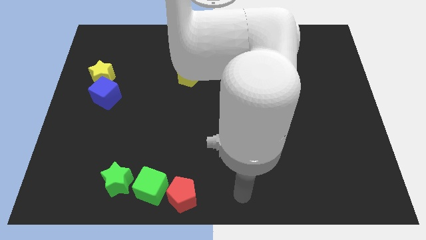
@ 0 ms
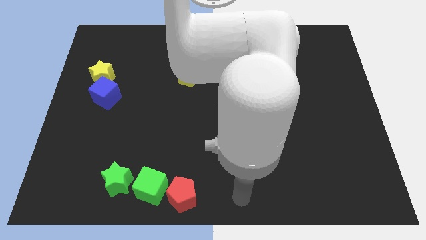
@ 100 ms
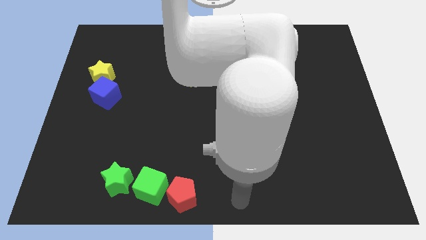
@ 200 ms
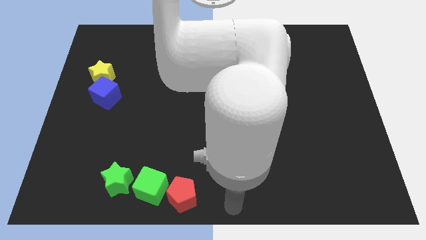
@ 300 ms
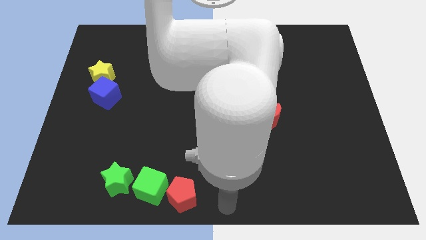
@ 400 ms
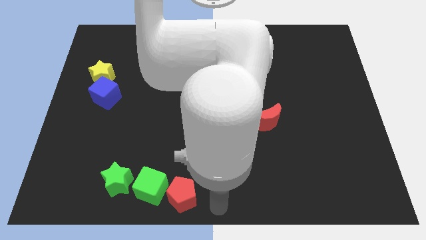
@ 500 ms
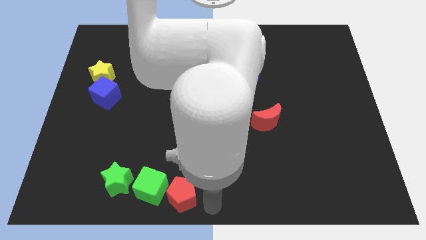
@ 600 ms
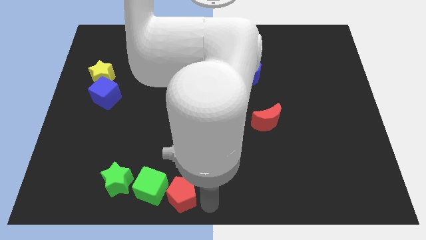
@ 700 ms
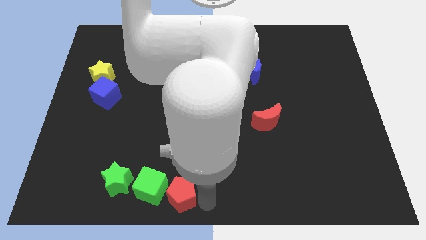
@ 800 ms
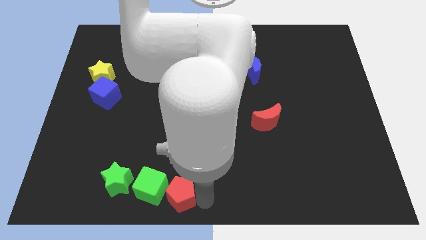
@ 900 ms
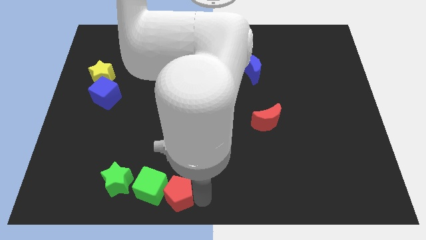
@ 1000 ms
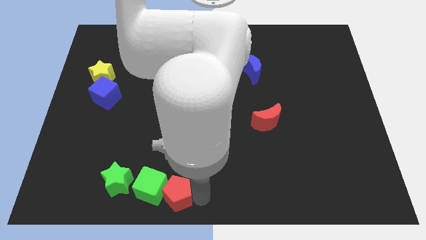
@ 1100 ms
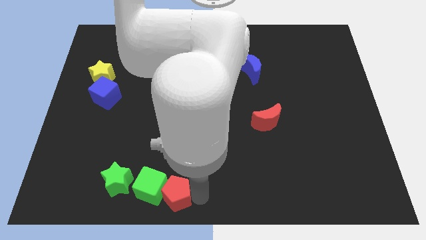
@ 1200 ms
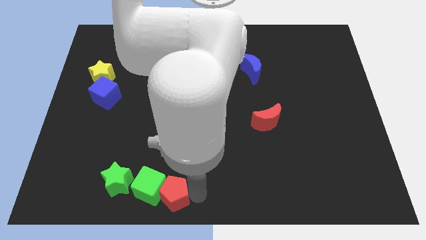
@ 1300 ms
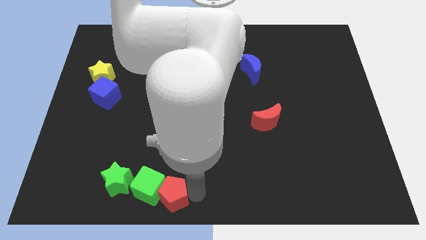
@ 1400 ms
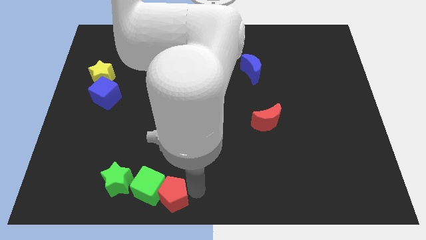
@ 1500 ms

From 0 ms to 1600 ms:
place the red pentagon next to the green cube

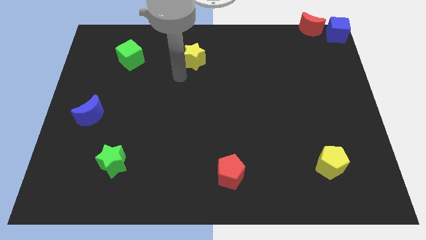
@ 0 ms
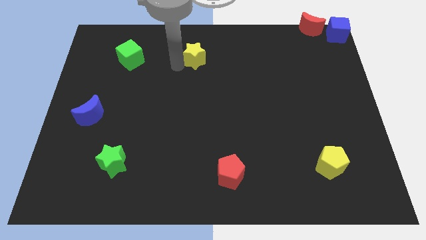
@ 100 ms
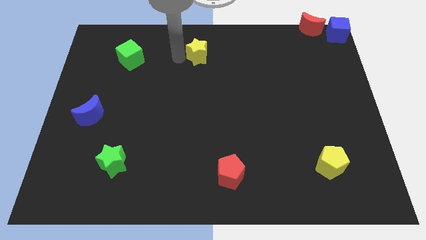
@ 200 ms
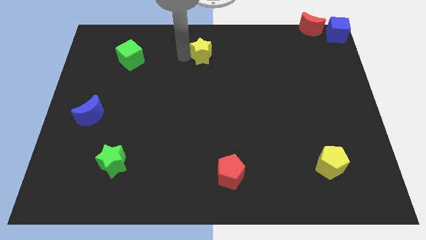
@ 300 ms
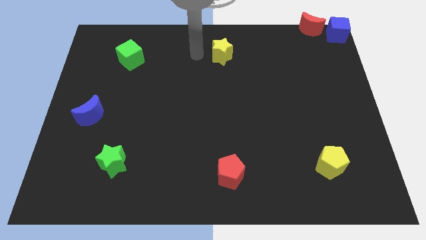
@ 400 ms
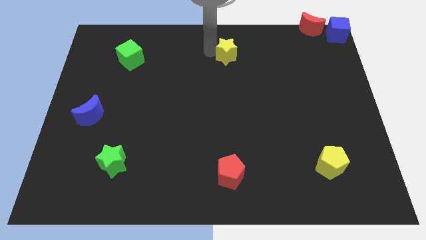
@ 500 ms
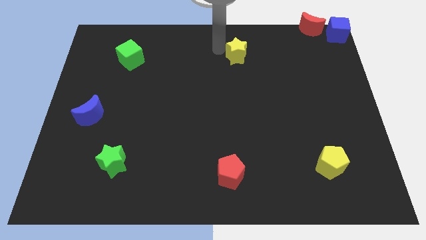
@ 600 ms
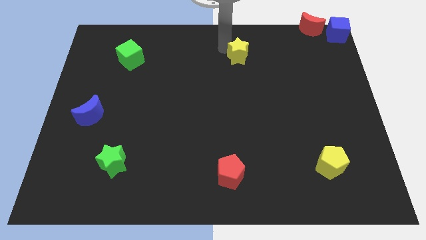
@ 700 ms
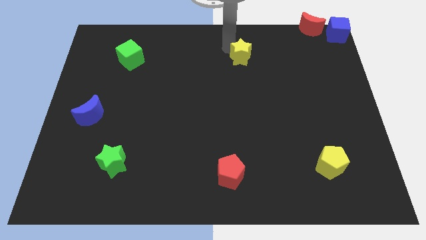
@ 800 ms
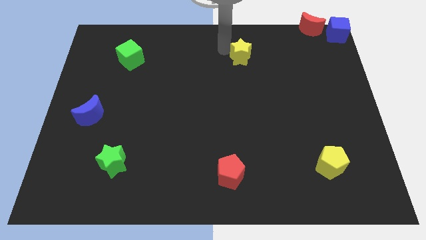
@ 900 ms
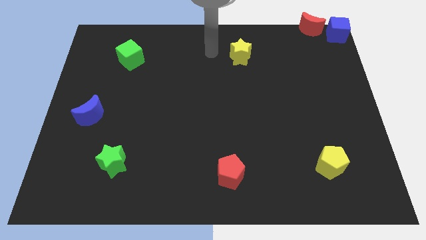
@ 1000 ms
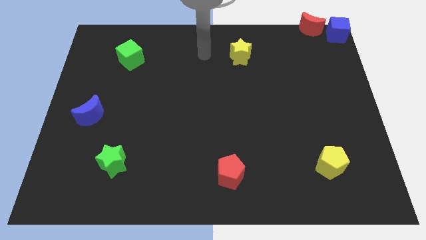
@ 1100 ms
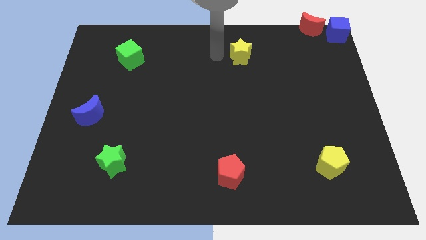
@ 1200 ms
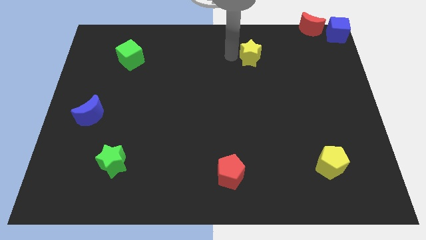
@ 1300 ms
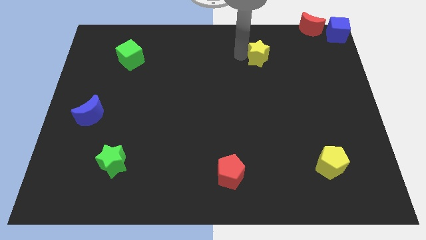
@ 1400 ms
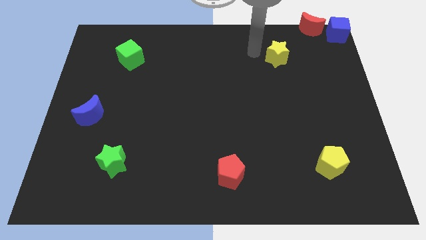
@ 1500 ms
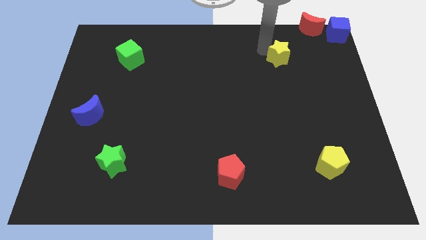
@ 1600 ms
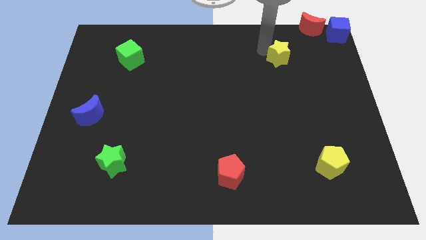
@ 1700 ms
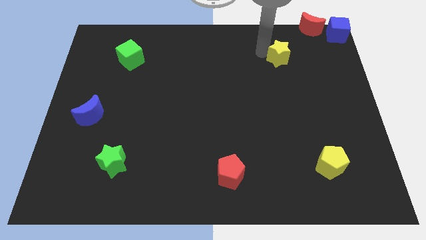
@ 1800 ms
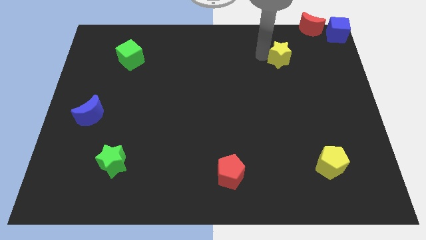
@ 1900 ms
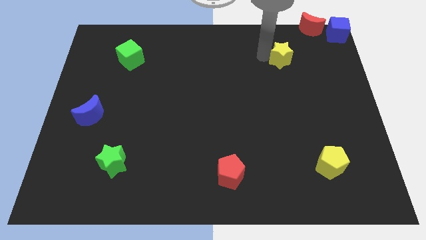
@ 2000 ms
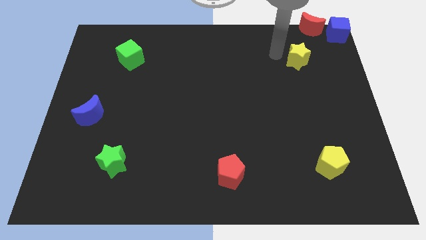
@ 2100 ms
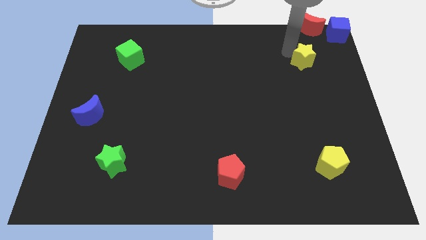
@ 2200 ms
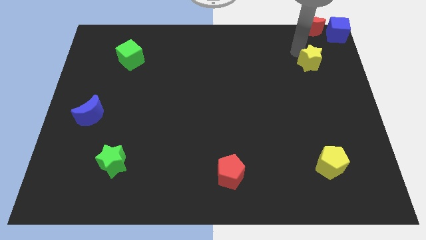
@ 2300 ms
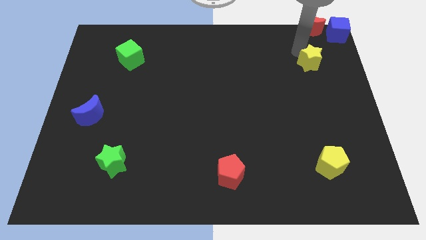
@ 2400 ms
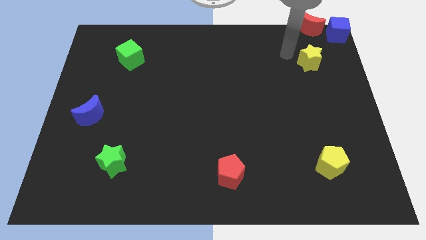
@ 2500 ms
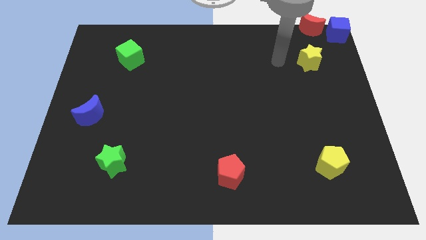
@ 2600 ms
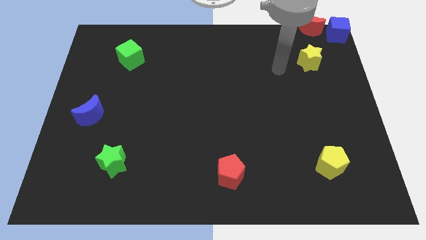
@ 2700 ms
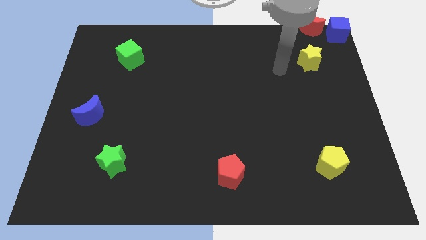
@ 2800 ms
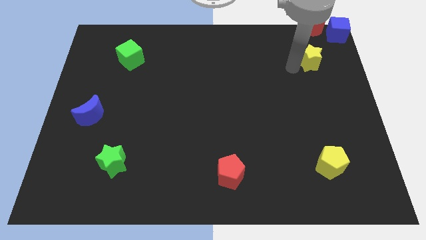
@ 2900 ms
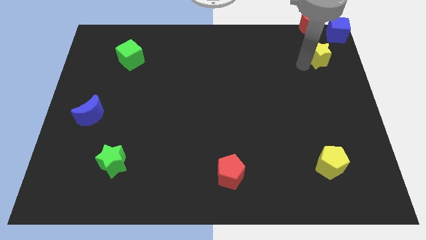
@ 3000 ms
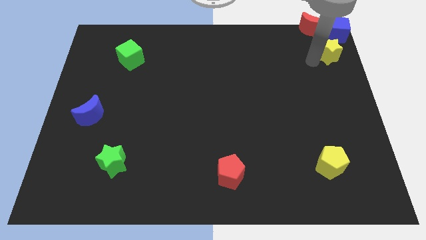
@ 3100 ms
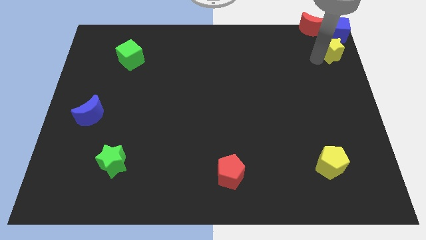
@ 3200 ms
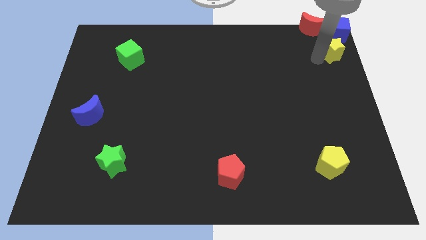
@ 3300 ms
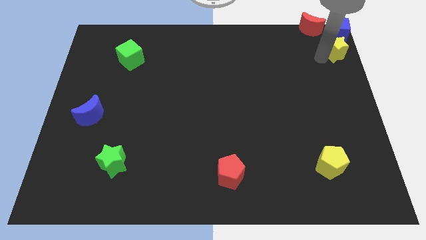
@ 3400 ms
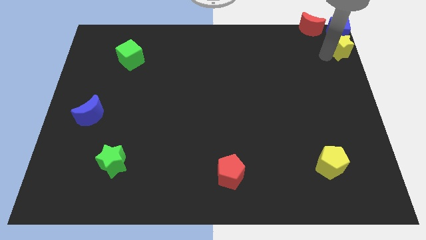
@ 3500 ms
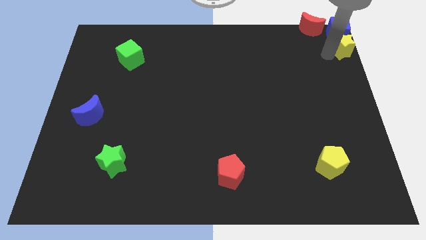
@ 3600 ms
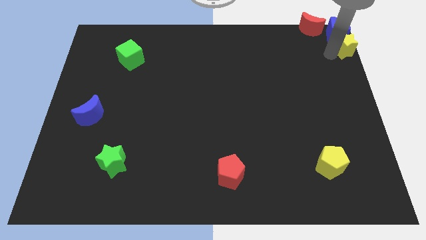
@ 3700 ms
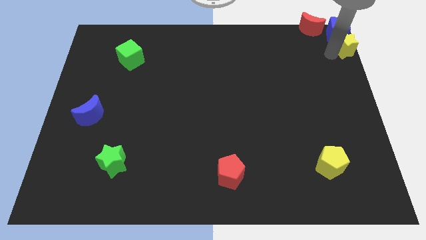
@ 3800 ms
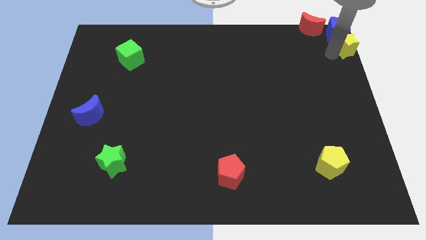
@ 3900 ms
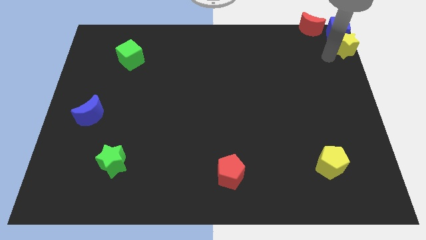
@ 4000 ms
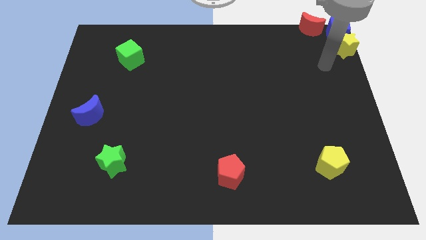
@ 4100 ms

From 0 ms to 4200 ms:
drag the yellow star to the bottom of the blue cube

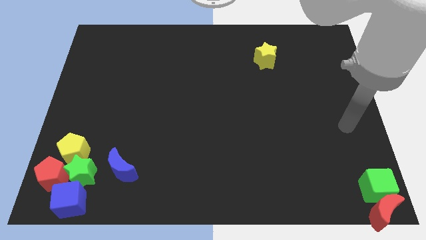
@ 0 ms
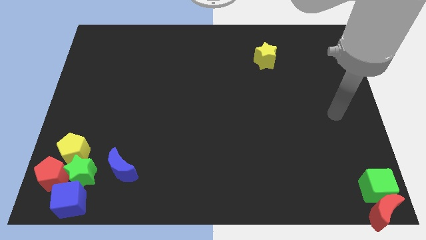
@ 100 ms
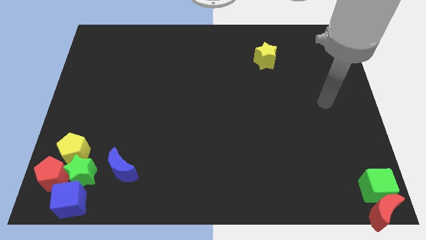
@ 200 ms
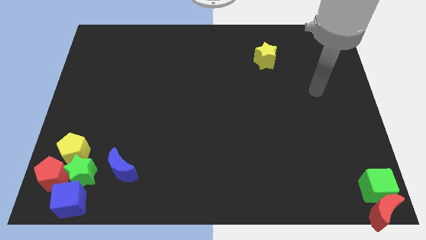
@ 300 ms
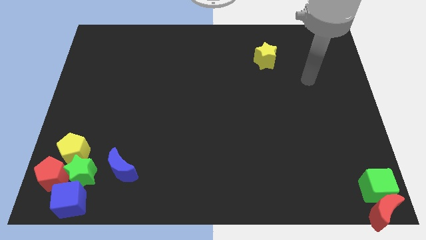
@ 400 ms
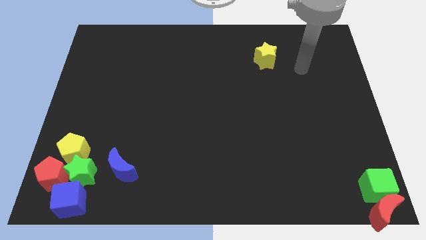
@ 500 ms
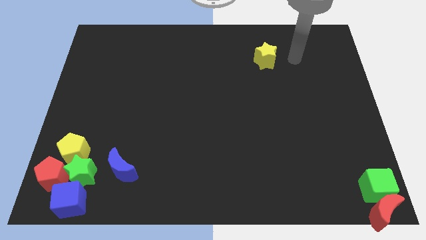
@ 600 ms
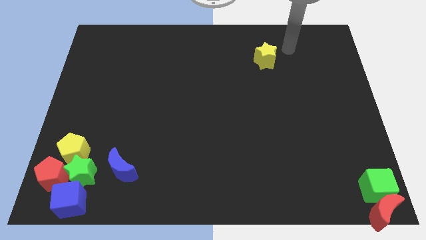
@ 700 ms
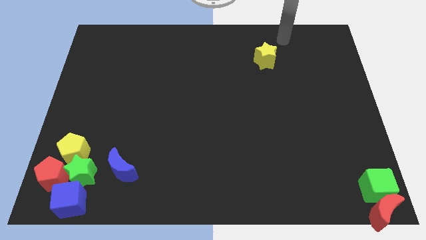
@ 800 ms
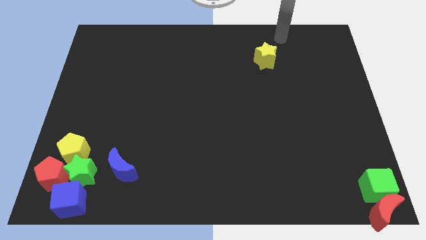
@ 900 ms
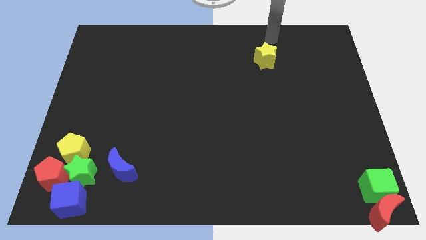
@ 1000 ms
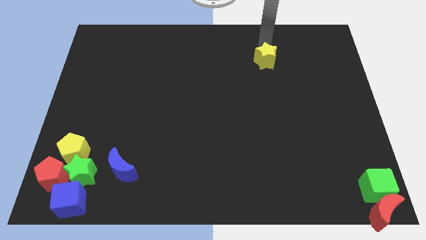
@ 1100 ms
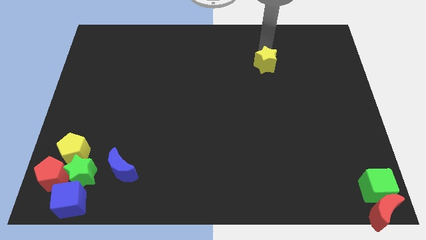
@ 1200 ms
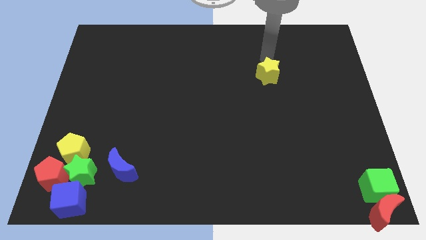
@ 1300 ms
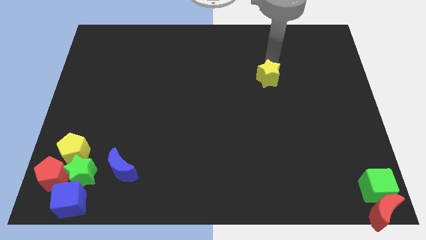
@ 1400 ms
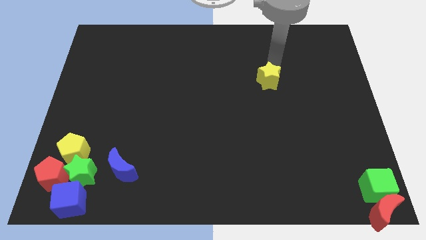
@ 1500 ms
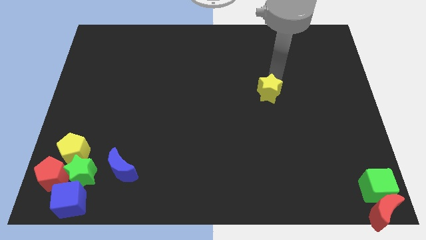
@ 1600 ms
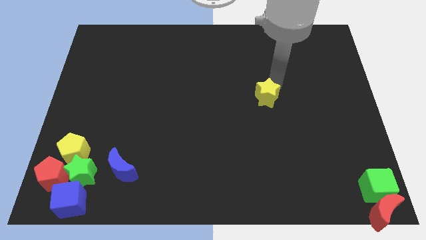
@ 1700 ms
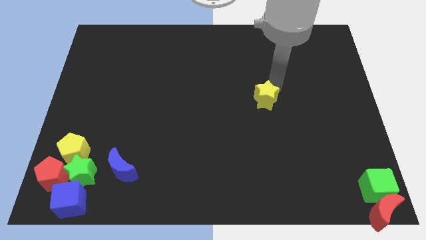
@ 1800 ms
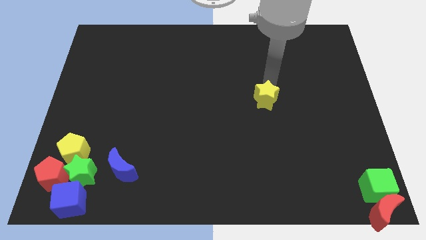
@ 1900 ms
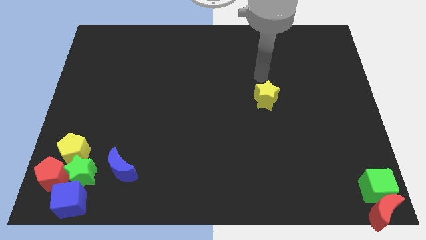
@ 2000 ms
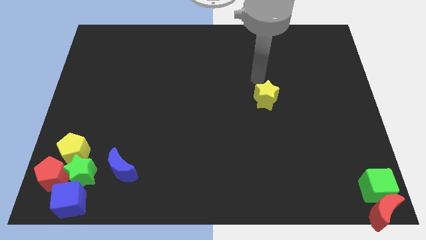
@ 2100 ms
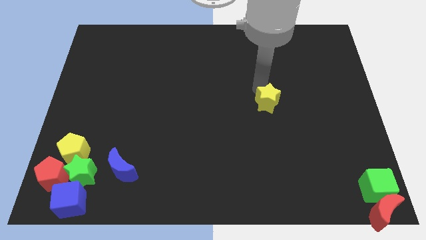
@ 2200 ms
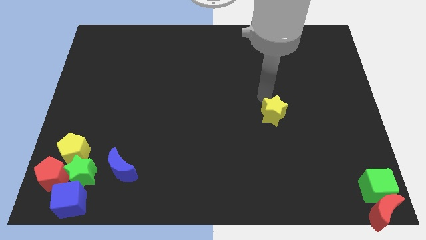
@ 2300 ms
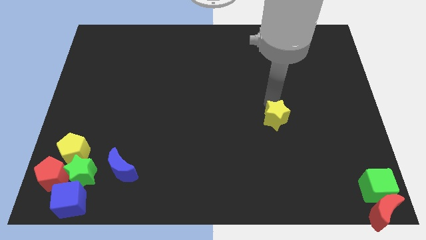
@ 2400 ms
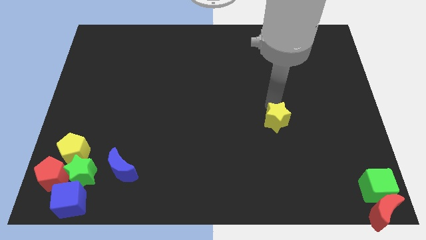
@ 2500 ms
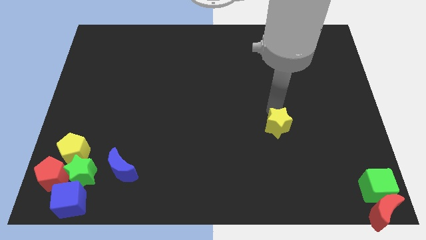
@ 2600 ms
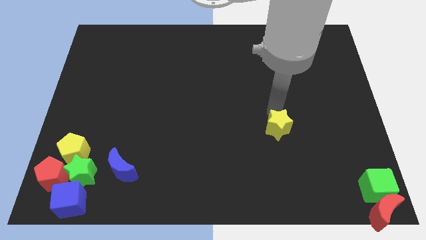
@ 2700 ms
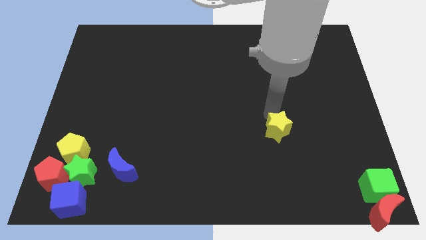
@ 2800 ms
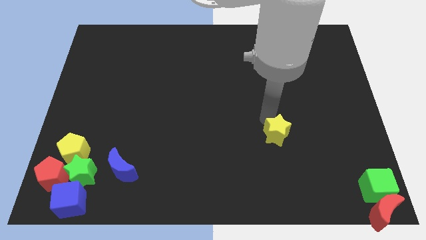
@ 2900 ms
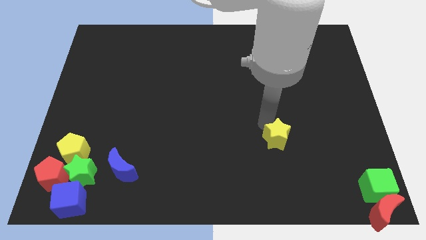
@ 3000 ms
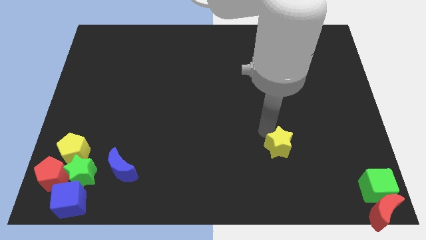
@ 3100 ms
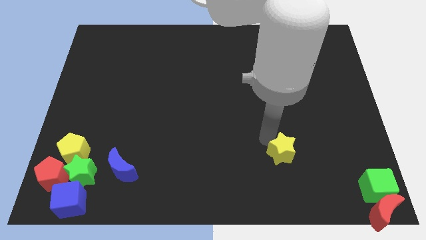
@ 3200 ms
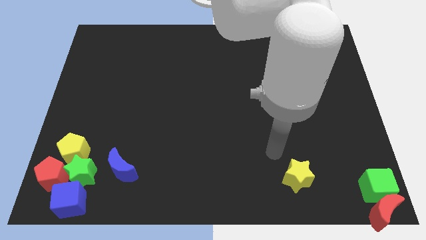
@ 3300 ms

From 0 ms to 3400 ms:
move the yellow star down to the board
